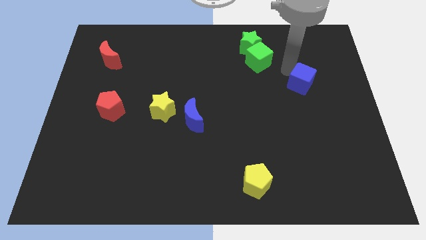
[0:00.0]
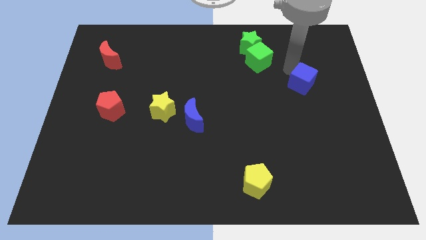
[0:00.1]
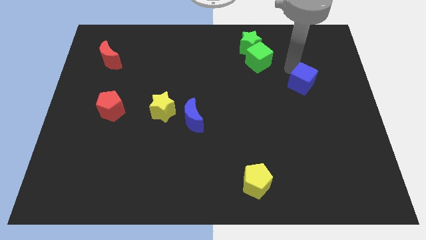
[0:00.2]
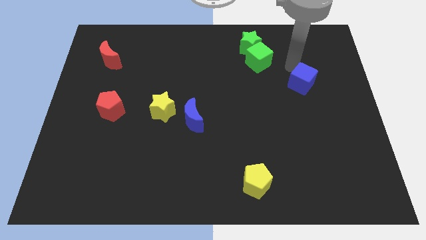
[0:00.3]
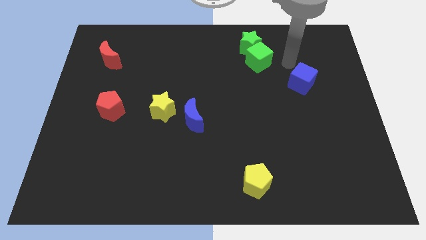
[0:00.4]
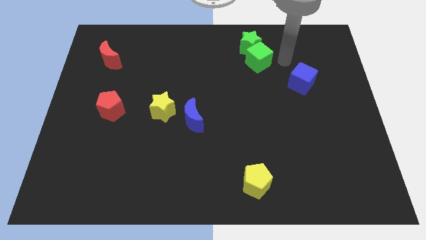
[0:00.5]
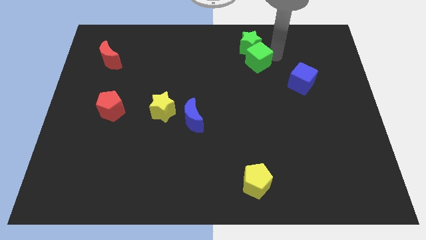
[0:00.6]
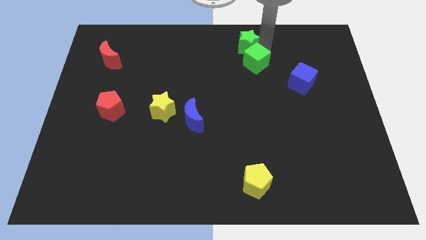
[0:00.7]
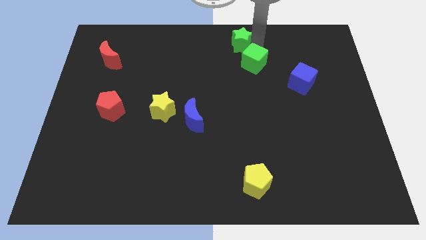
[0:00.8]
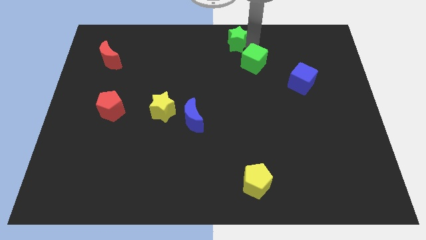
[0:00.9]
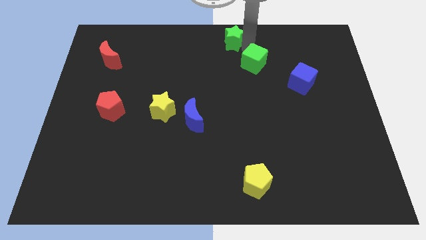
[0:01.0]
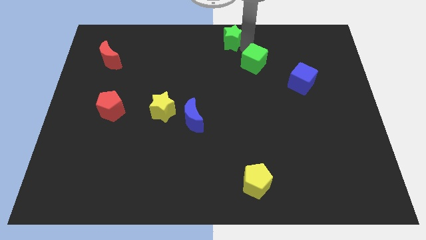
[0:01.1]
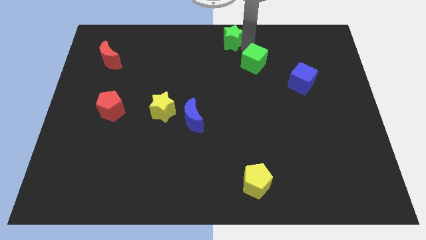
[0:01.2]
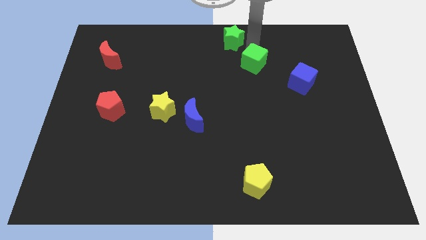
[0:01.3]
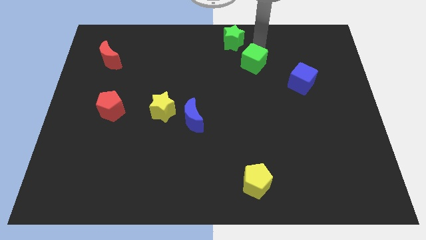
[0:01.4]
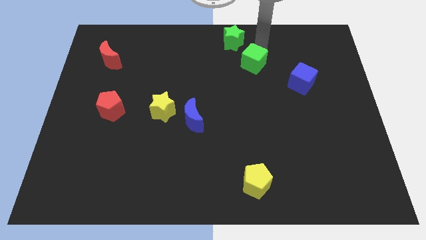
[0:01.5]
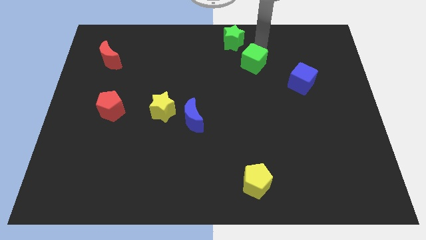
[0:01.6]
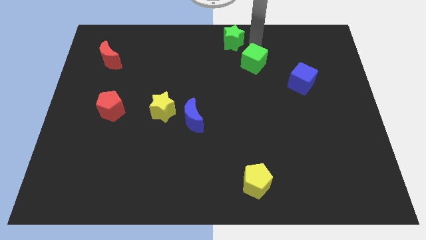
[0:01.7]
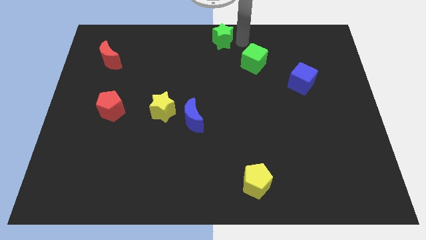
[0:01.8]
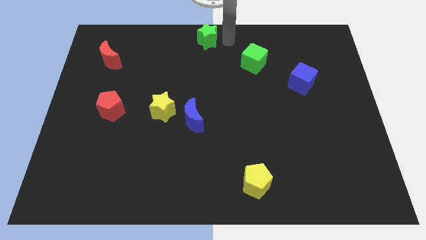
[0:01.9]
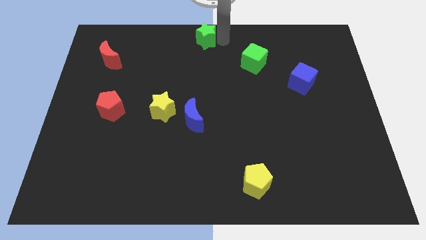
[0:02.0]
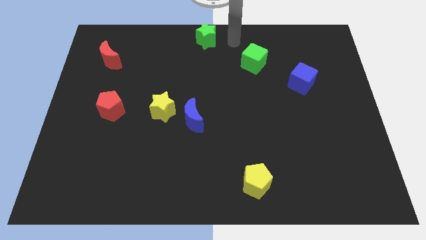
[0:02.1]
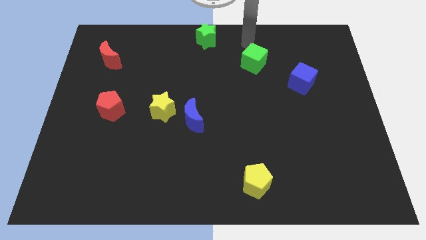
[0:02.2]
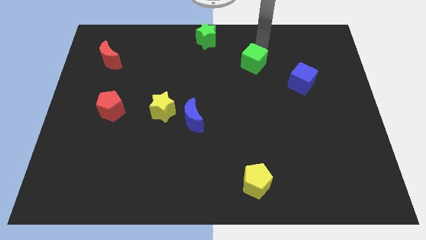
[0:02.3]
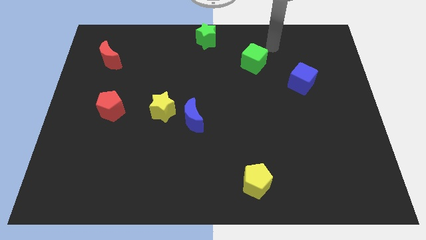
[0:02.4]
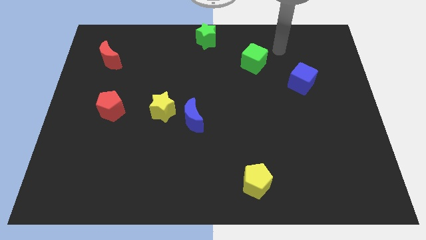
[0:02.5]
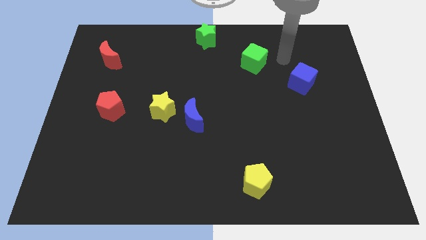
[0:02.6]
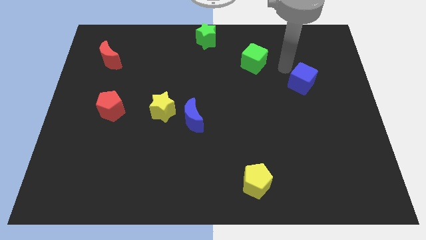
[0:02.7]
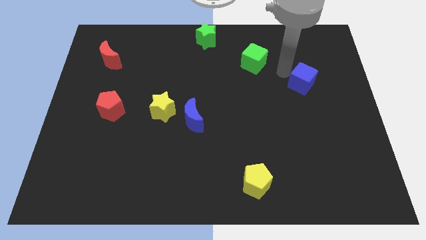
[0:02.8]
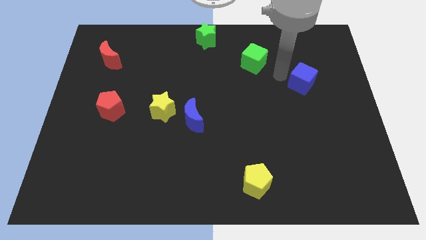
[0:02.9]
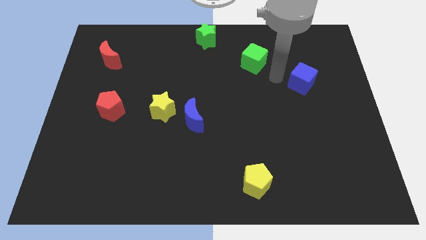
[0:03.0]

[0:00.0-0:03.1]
separate the green star and green cube

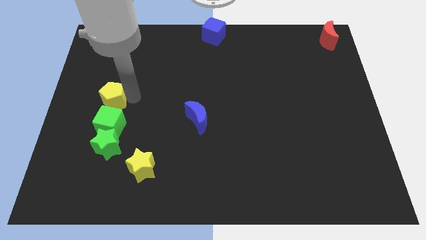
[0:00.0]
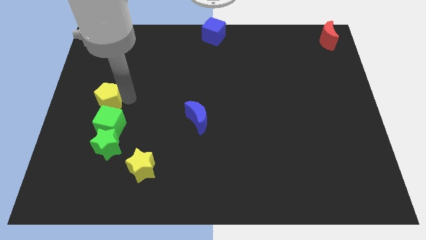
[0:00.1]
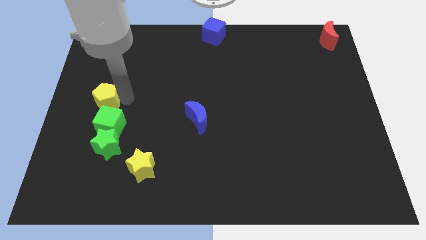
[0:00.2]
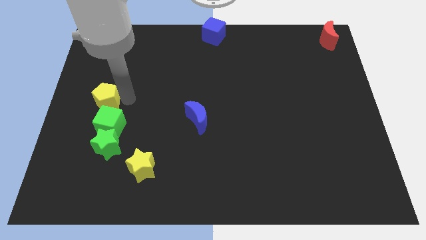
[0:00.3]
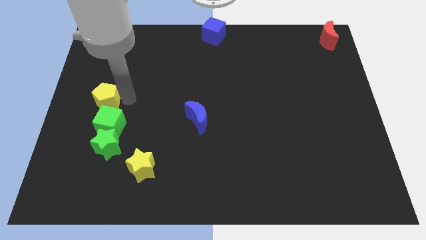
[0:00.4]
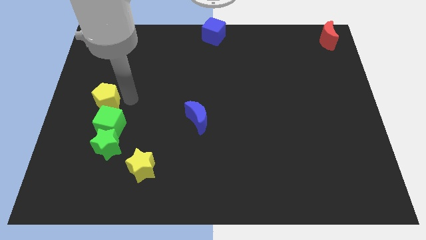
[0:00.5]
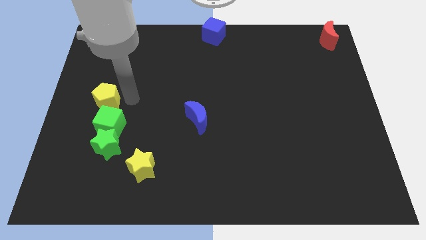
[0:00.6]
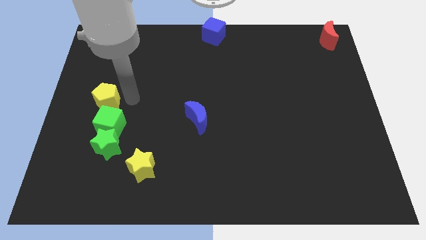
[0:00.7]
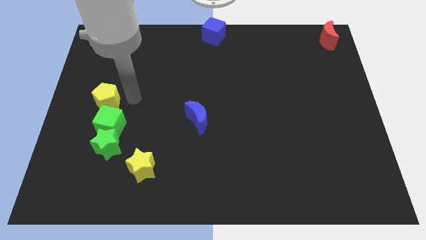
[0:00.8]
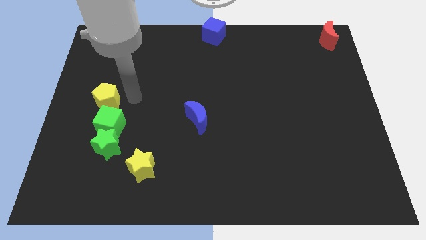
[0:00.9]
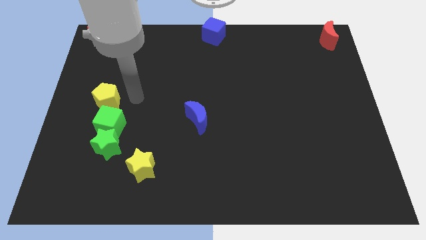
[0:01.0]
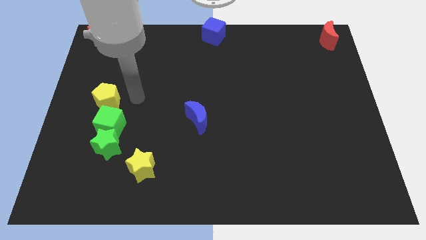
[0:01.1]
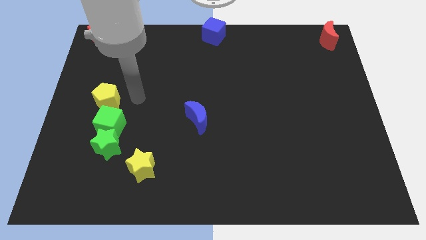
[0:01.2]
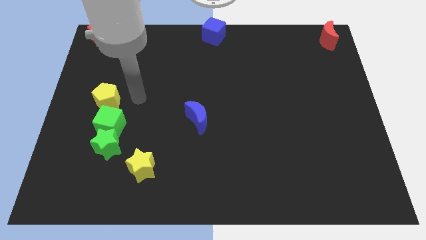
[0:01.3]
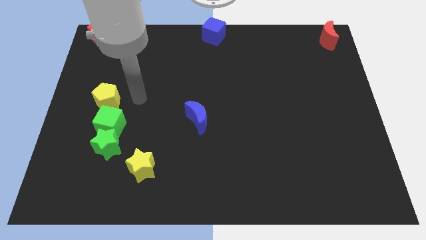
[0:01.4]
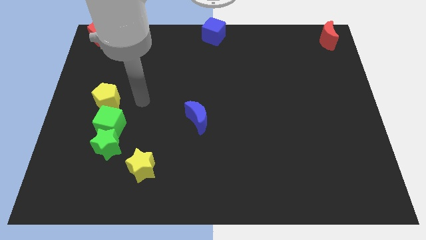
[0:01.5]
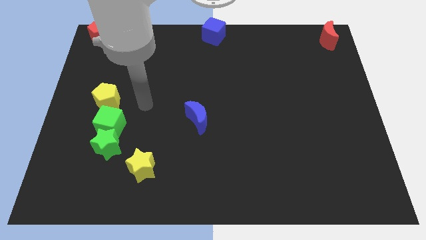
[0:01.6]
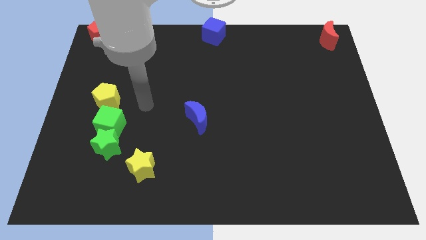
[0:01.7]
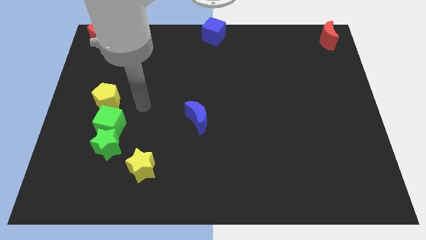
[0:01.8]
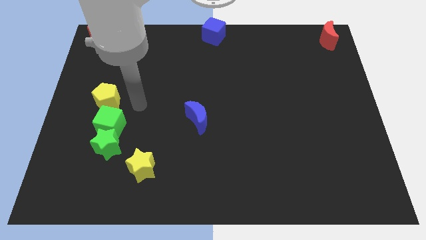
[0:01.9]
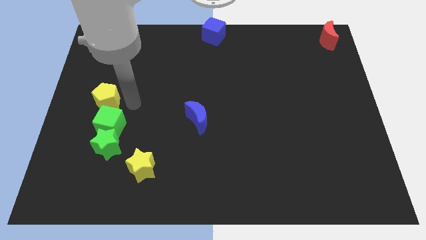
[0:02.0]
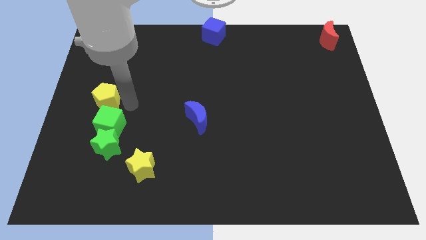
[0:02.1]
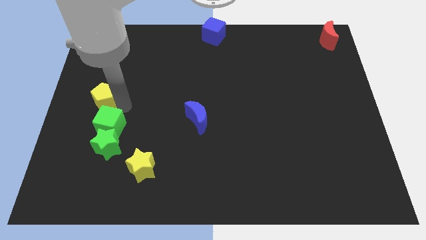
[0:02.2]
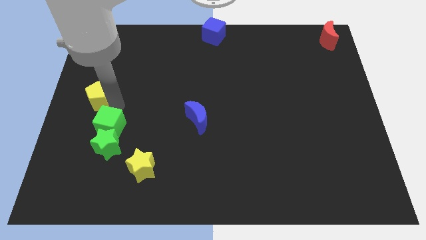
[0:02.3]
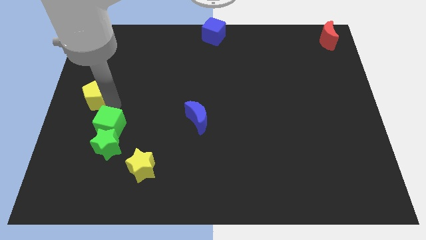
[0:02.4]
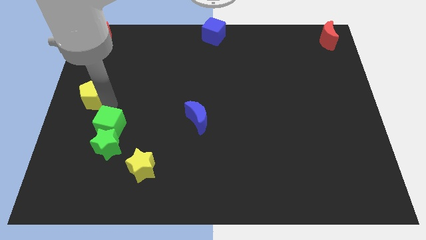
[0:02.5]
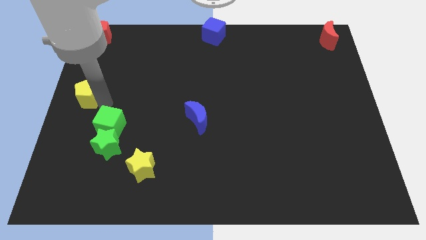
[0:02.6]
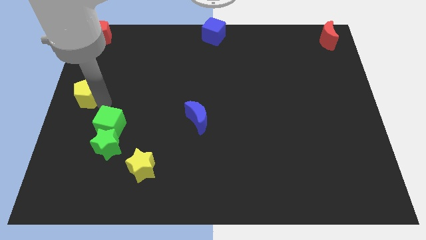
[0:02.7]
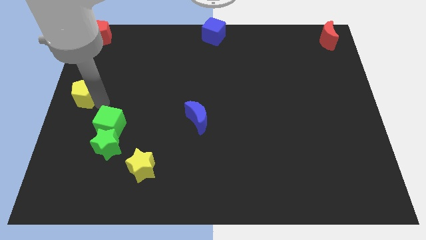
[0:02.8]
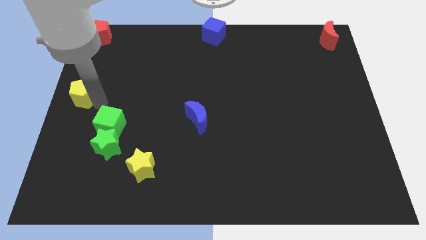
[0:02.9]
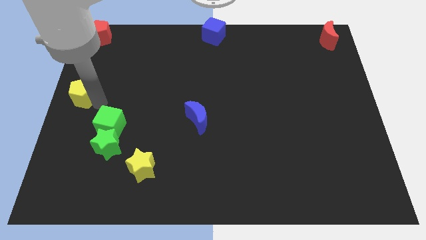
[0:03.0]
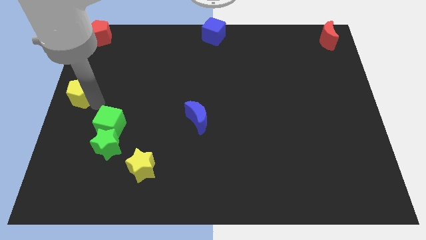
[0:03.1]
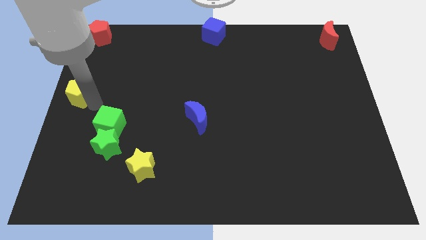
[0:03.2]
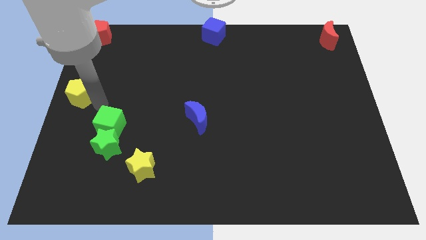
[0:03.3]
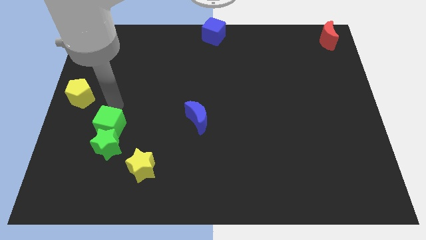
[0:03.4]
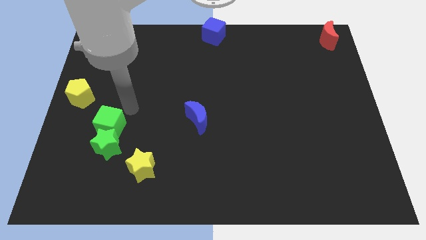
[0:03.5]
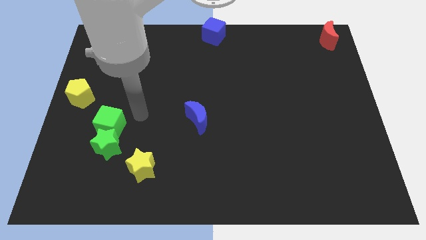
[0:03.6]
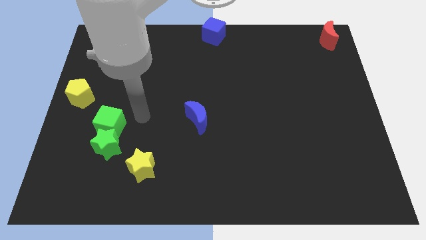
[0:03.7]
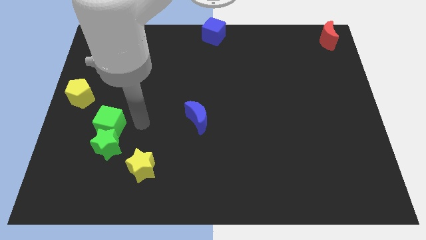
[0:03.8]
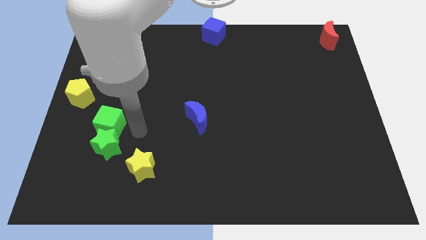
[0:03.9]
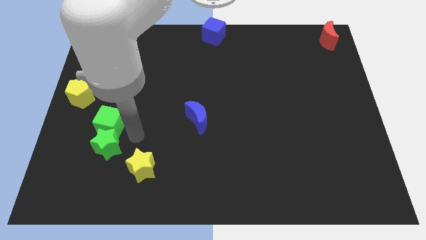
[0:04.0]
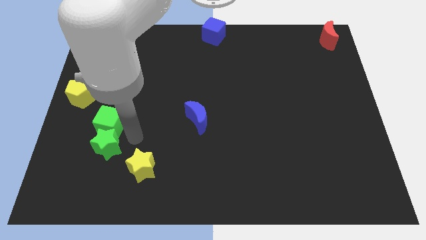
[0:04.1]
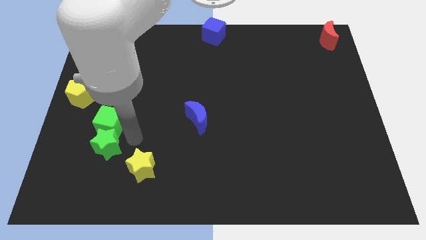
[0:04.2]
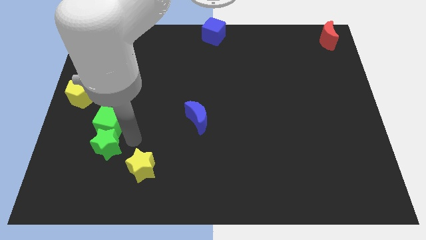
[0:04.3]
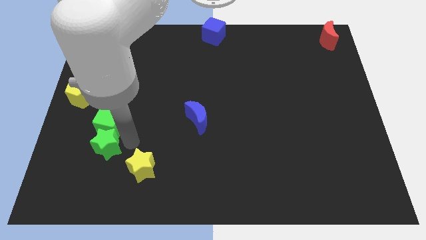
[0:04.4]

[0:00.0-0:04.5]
place the yellow pentagon to the center left of the board

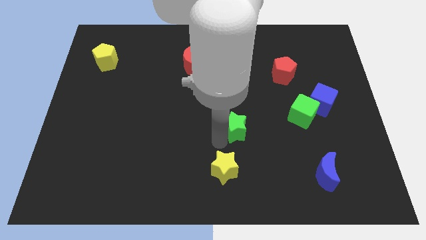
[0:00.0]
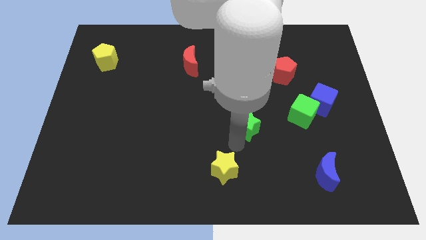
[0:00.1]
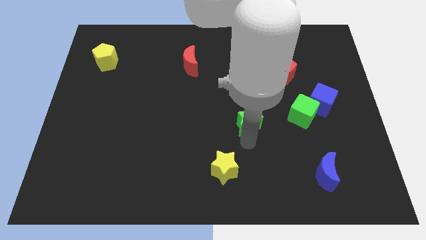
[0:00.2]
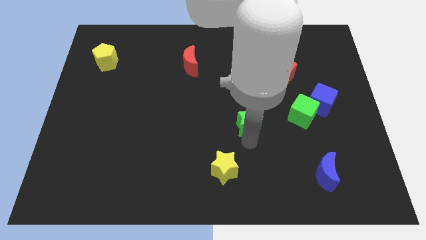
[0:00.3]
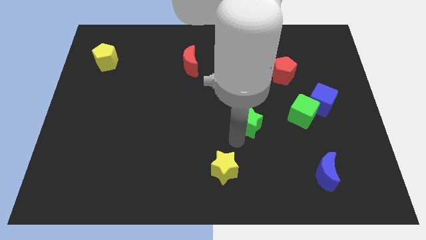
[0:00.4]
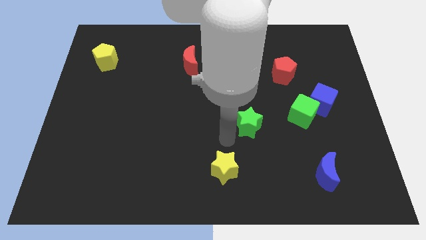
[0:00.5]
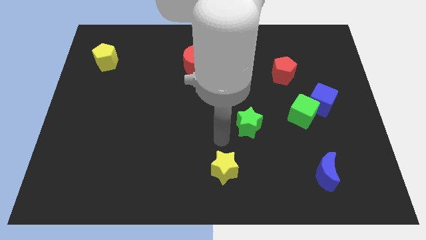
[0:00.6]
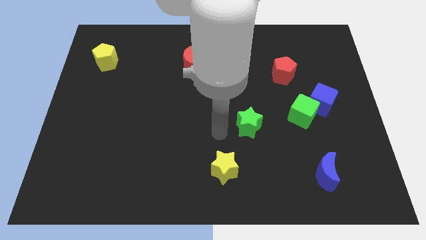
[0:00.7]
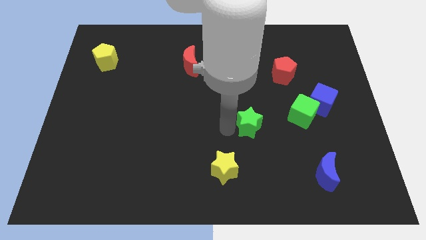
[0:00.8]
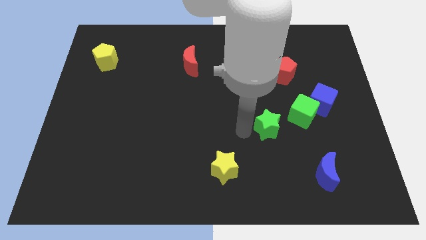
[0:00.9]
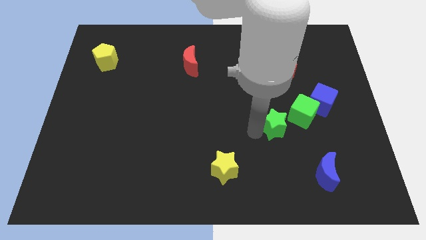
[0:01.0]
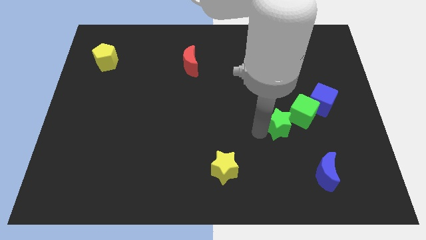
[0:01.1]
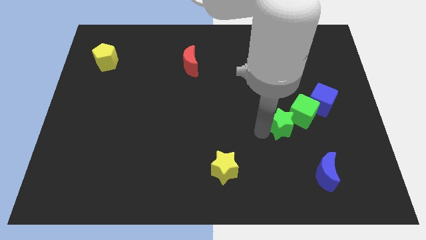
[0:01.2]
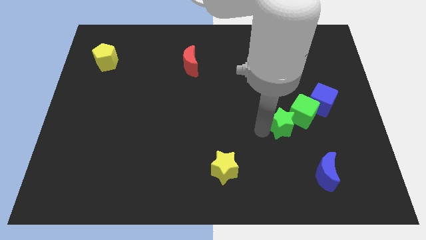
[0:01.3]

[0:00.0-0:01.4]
move the green star into the green cube
